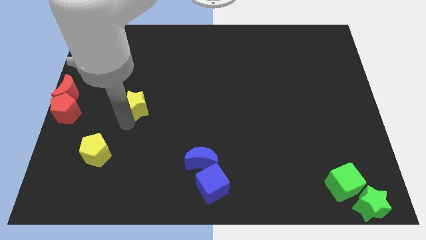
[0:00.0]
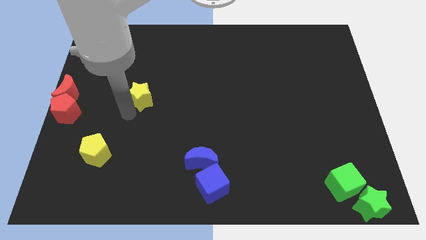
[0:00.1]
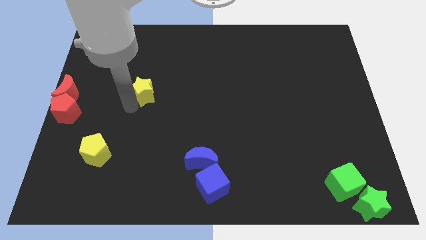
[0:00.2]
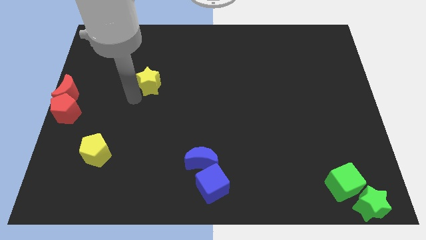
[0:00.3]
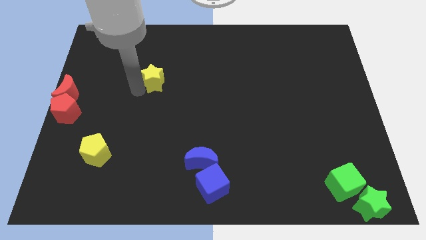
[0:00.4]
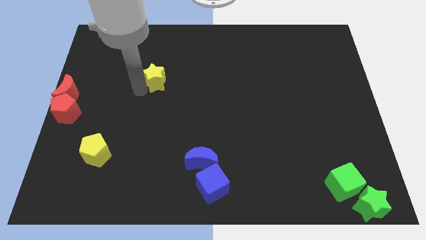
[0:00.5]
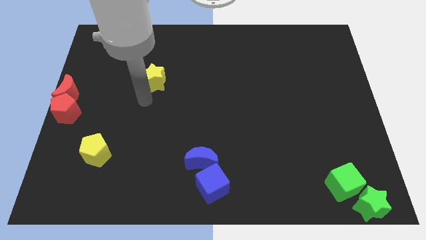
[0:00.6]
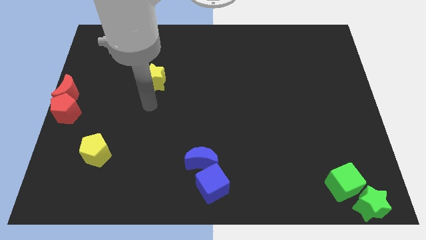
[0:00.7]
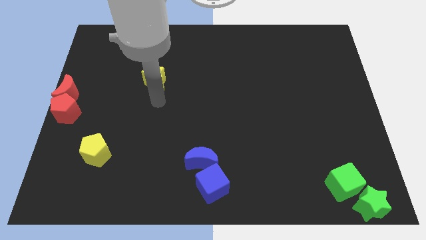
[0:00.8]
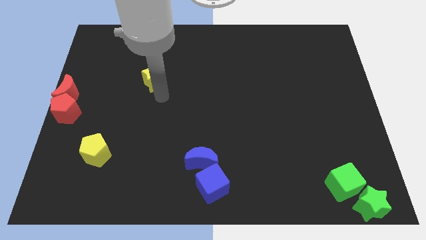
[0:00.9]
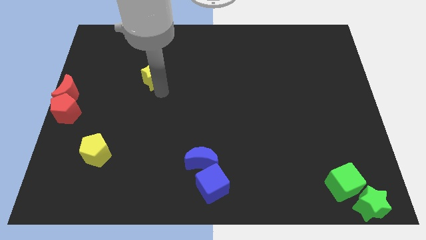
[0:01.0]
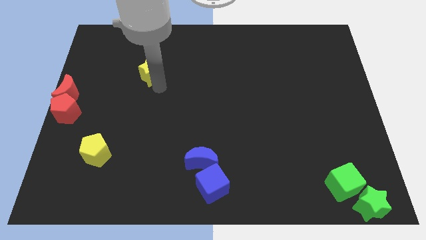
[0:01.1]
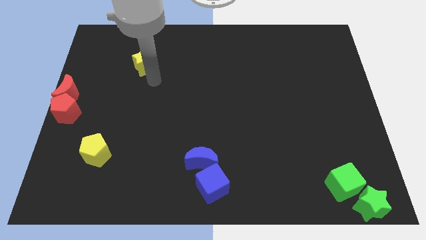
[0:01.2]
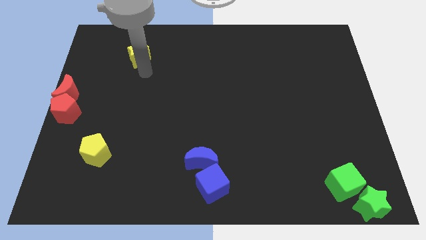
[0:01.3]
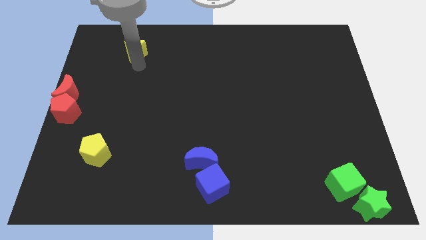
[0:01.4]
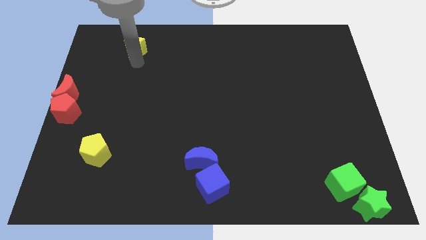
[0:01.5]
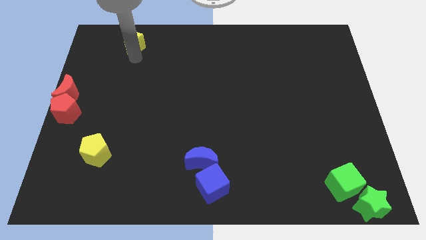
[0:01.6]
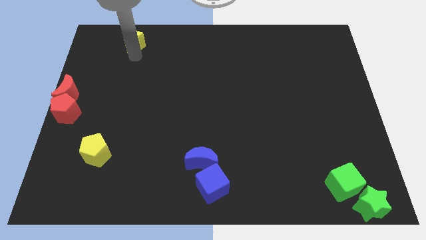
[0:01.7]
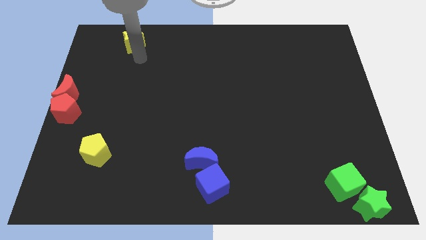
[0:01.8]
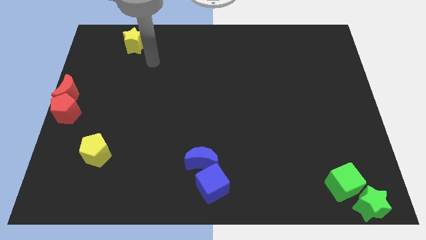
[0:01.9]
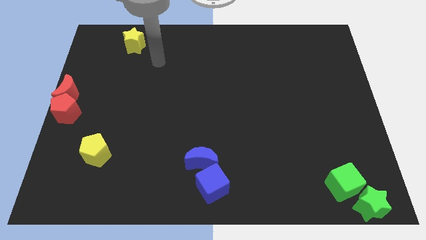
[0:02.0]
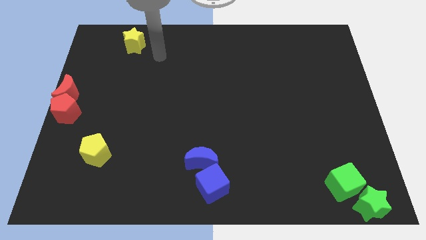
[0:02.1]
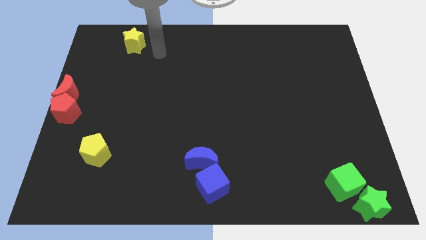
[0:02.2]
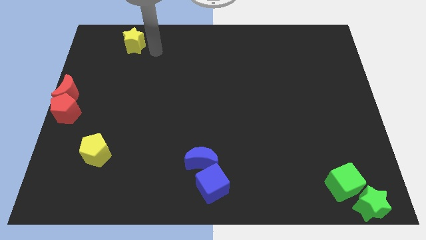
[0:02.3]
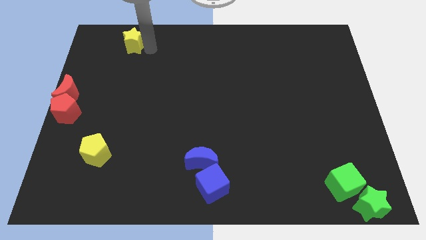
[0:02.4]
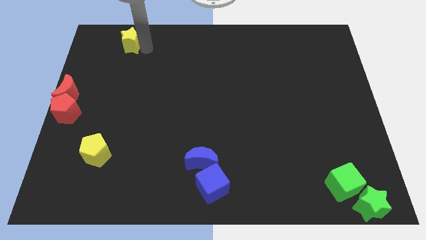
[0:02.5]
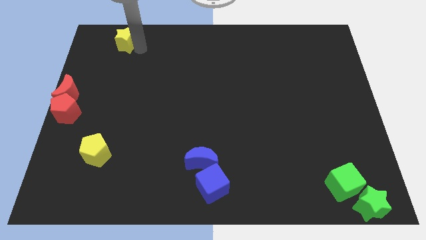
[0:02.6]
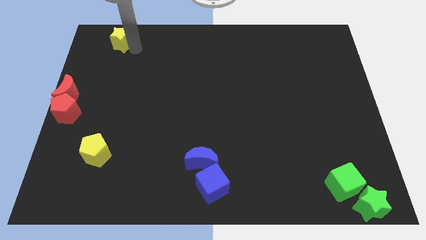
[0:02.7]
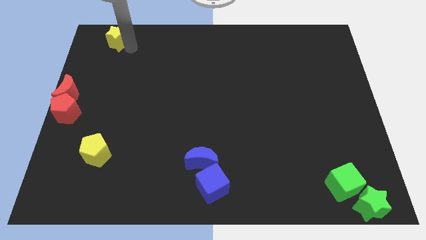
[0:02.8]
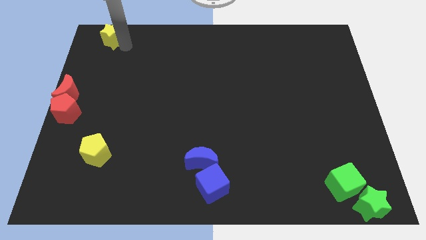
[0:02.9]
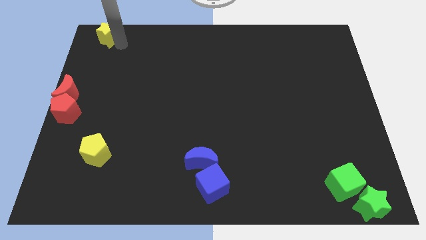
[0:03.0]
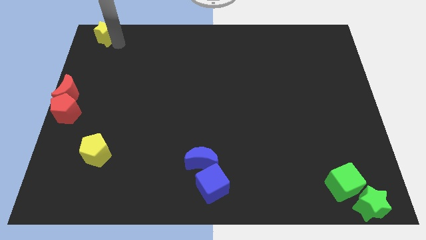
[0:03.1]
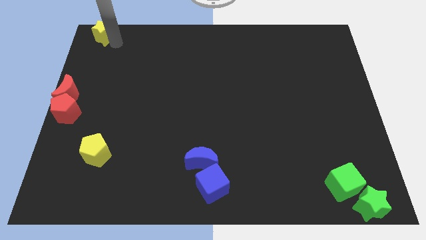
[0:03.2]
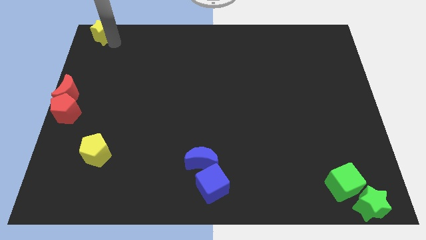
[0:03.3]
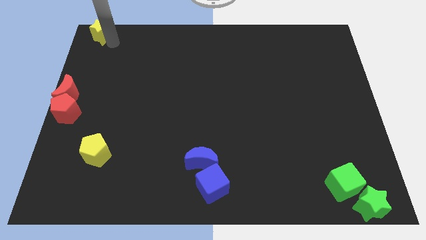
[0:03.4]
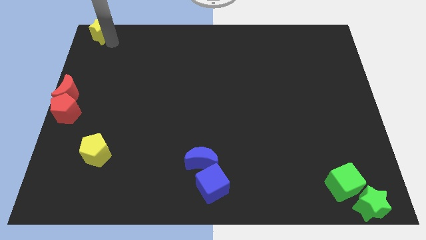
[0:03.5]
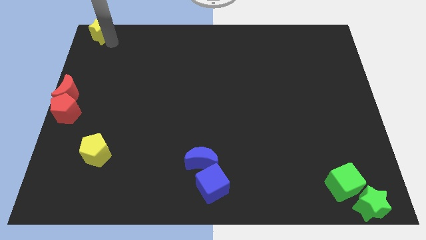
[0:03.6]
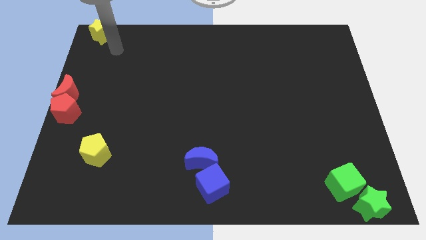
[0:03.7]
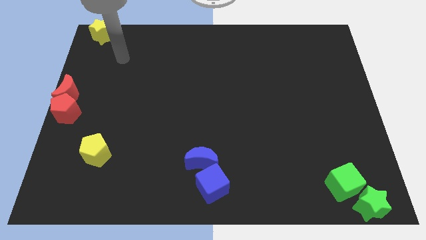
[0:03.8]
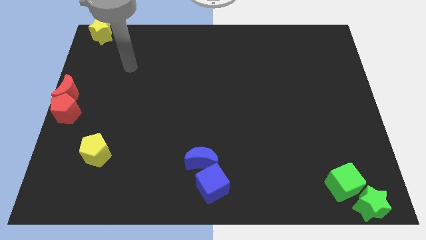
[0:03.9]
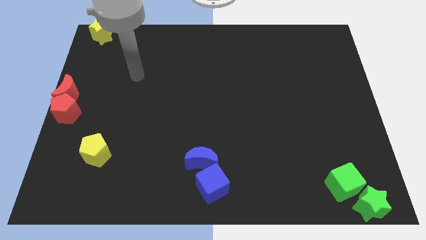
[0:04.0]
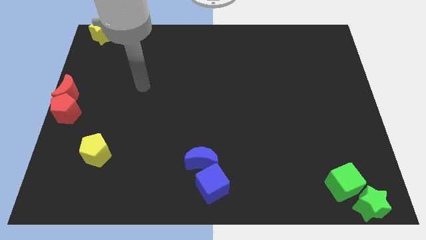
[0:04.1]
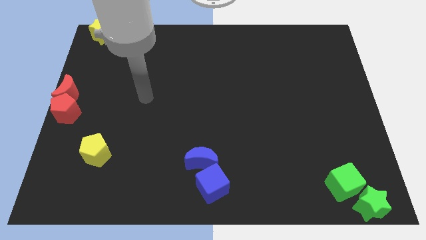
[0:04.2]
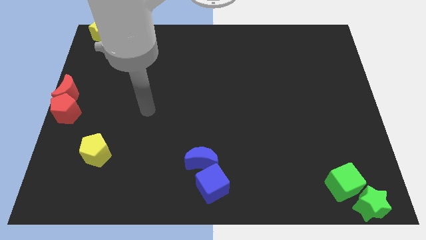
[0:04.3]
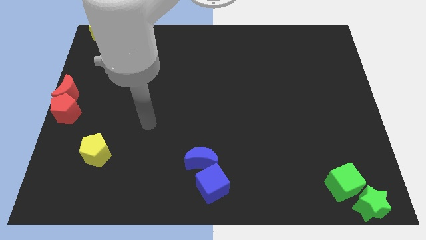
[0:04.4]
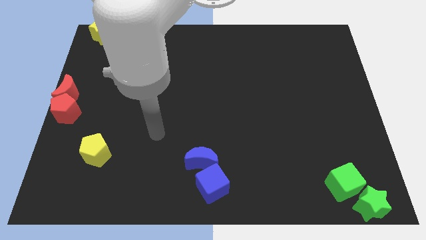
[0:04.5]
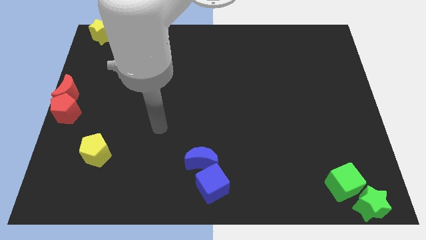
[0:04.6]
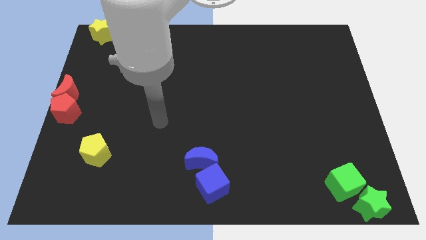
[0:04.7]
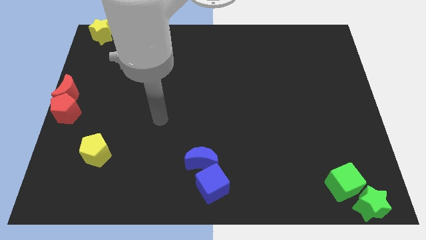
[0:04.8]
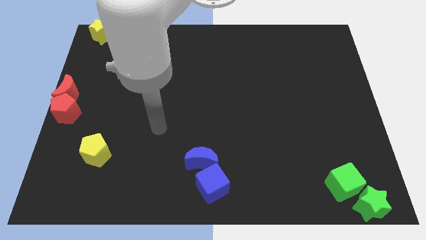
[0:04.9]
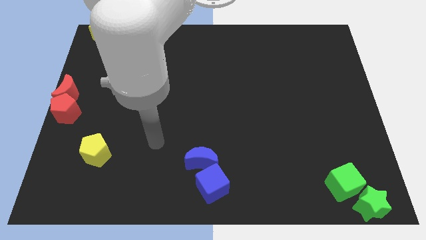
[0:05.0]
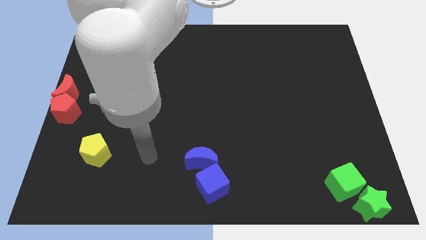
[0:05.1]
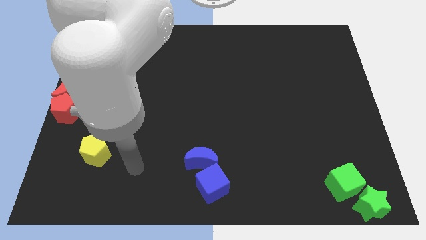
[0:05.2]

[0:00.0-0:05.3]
move the yellow star to the top left corner

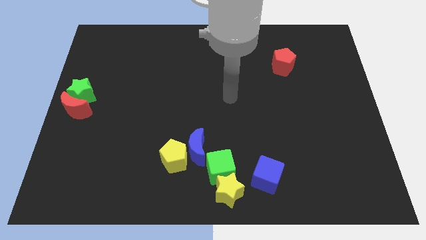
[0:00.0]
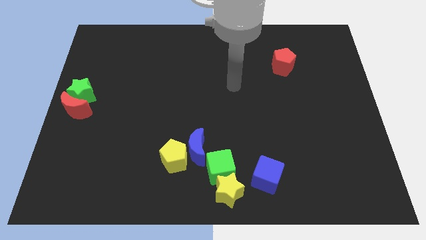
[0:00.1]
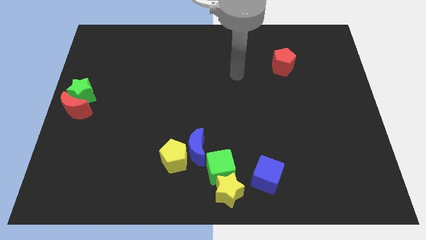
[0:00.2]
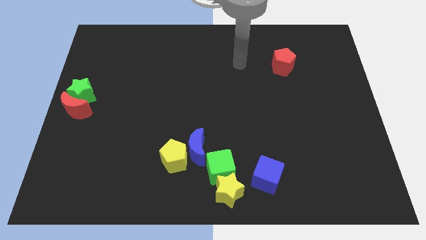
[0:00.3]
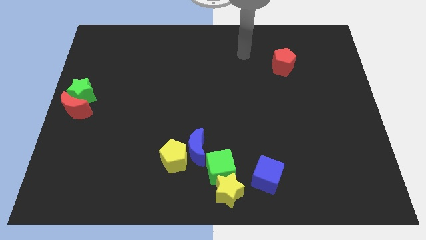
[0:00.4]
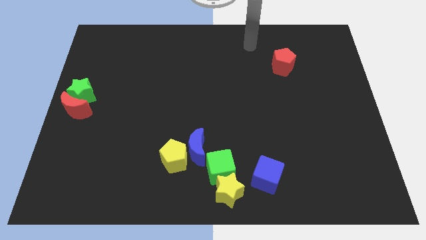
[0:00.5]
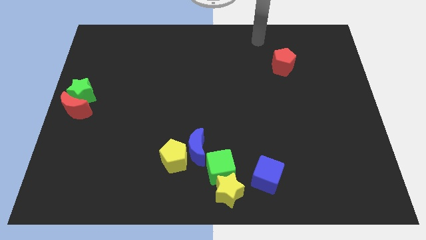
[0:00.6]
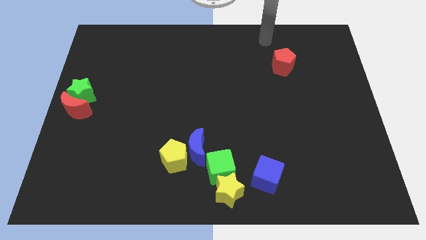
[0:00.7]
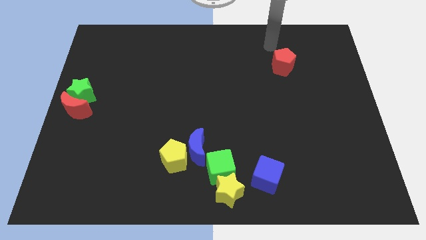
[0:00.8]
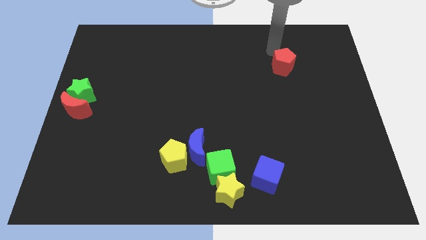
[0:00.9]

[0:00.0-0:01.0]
go near the red pentagon

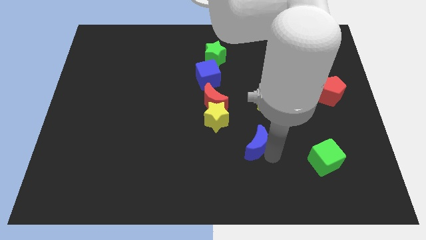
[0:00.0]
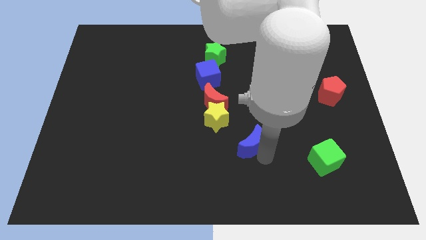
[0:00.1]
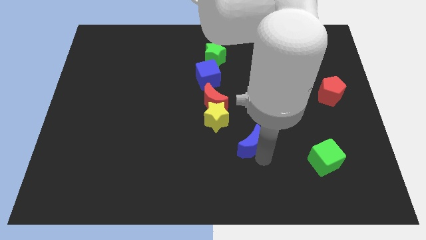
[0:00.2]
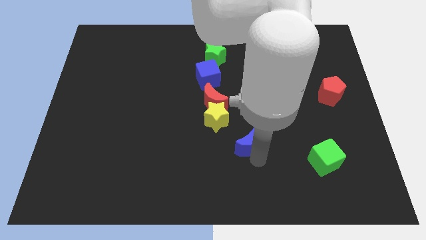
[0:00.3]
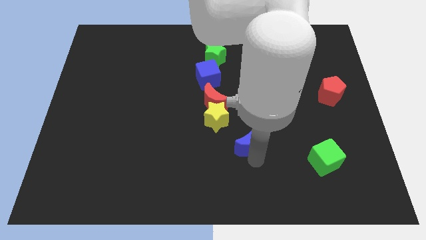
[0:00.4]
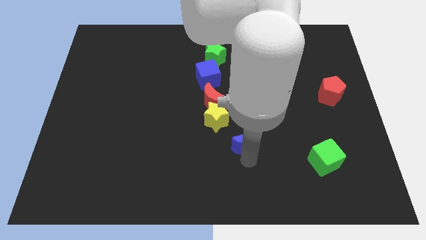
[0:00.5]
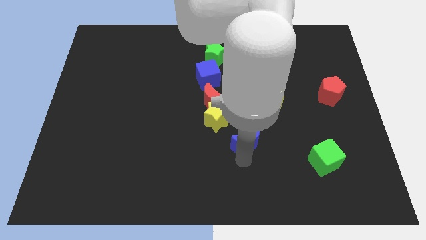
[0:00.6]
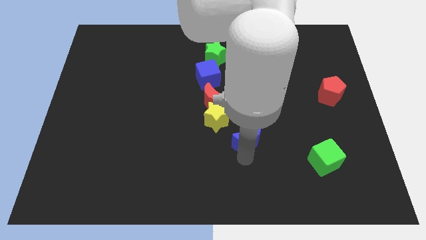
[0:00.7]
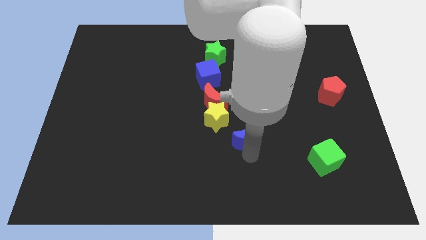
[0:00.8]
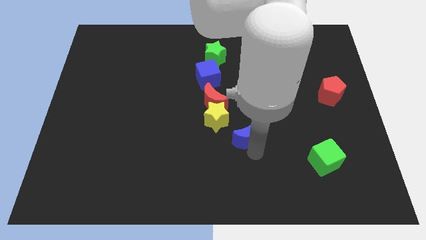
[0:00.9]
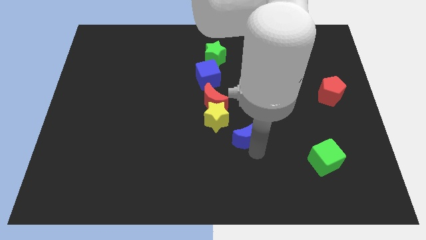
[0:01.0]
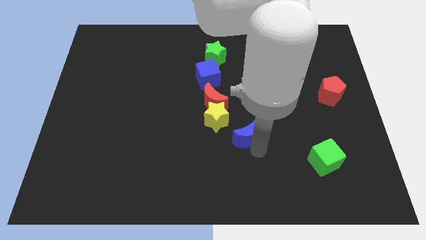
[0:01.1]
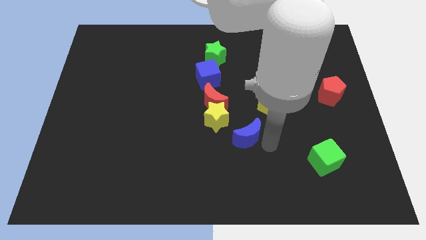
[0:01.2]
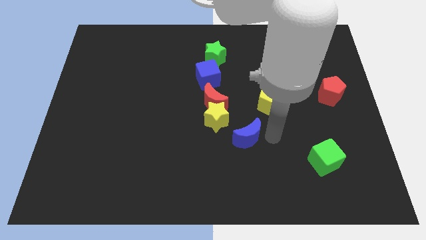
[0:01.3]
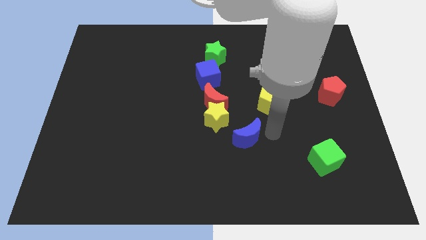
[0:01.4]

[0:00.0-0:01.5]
push the blue crescent to the top of the board

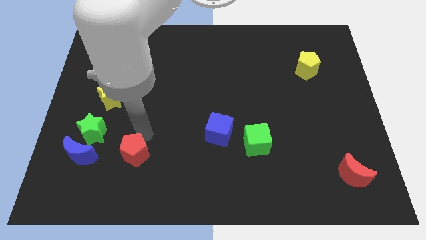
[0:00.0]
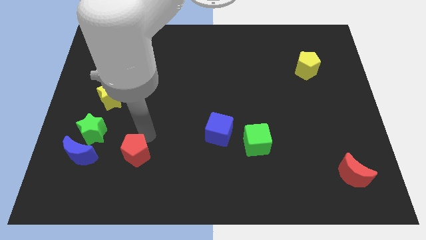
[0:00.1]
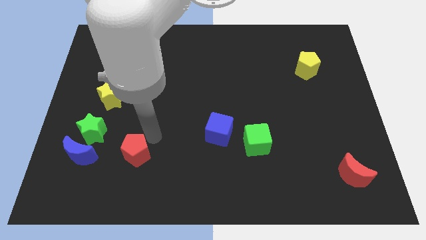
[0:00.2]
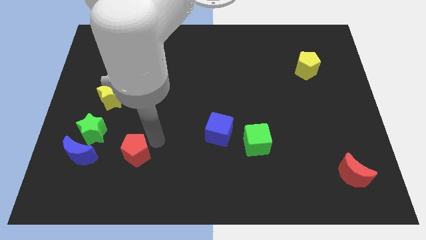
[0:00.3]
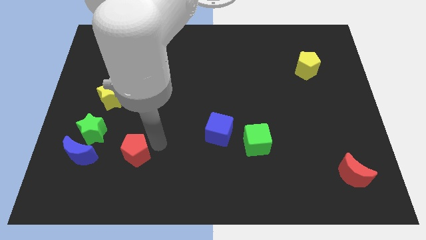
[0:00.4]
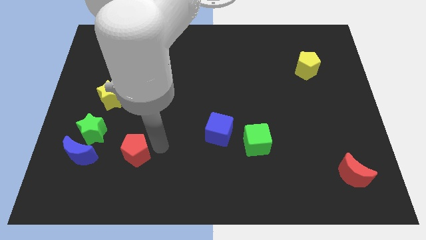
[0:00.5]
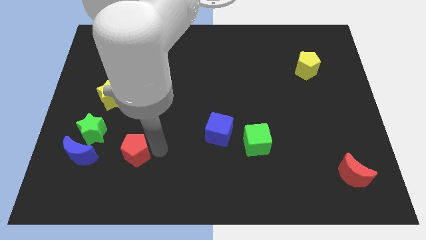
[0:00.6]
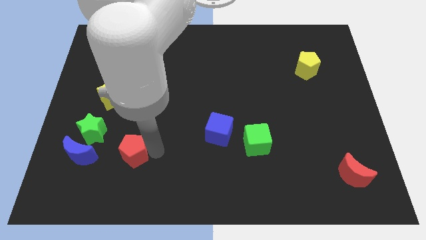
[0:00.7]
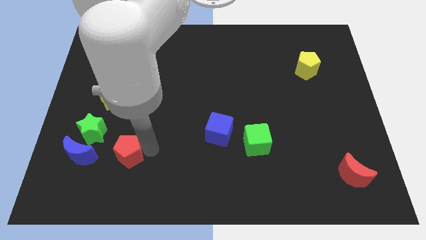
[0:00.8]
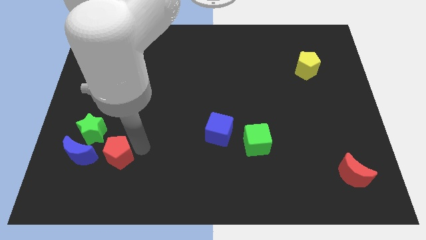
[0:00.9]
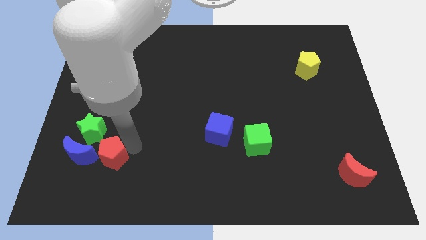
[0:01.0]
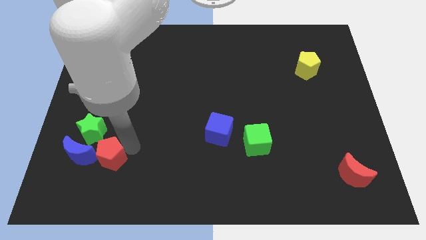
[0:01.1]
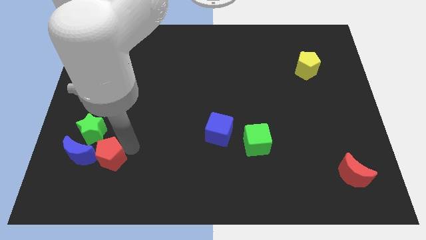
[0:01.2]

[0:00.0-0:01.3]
move the red pentagon right to the blue crescent
